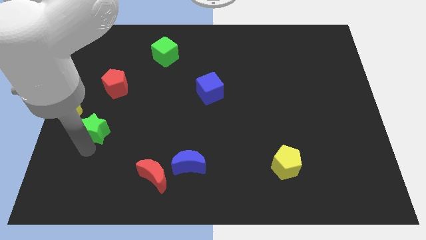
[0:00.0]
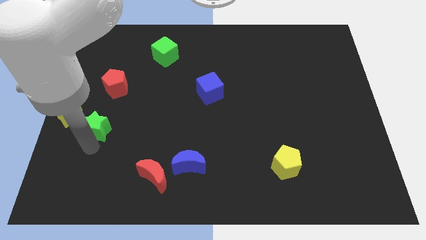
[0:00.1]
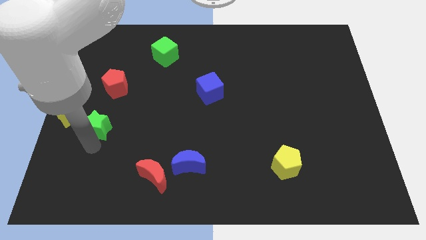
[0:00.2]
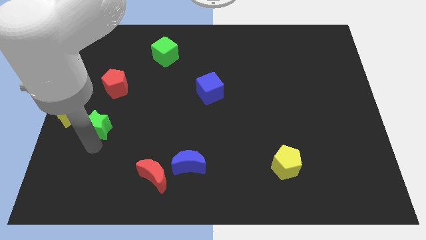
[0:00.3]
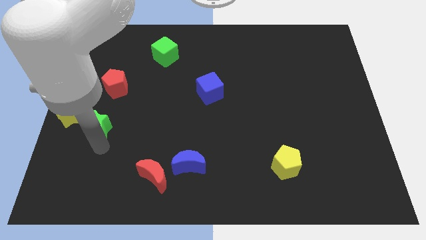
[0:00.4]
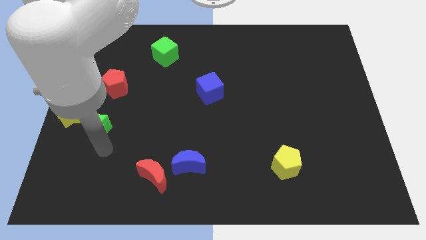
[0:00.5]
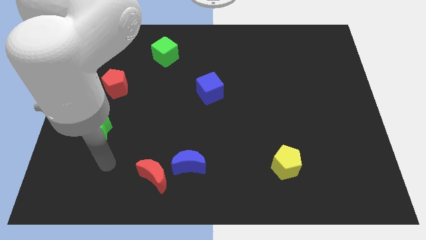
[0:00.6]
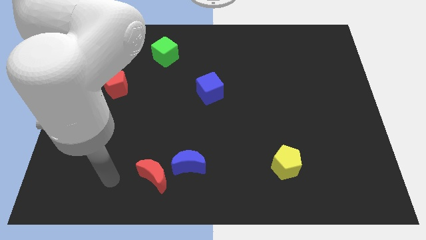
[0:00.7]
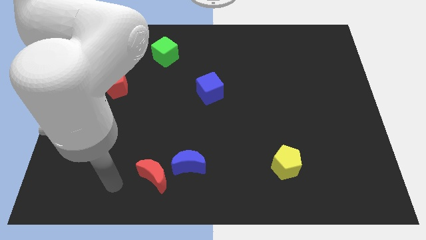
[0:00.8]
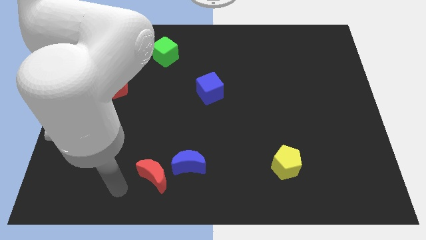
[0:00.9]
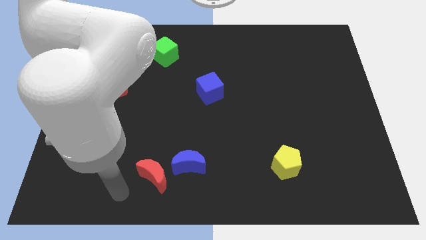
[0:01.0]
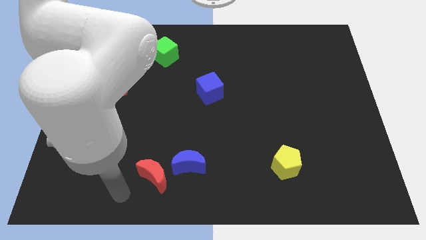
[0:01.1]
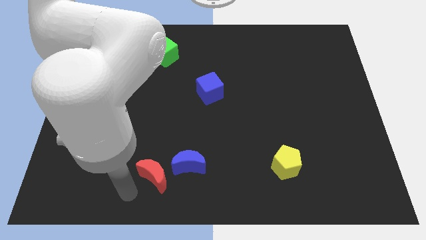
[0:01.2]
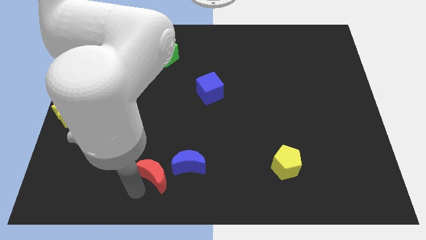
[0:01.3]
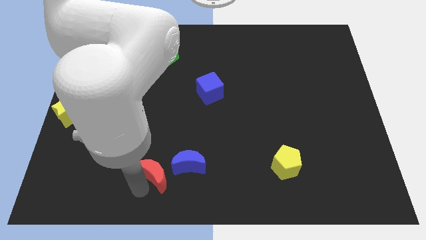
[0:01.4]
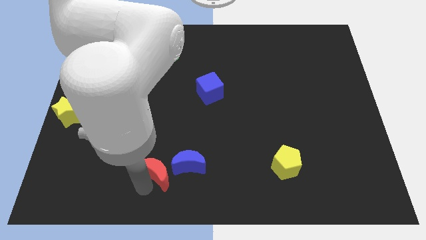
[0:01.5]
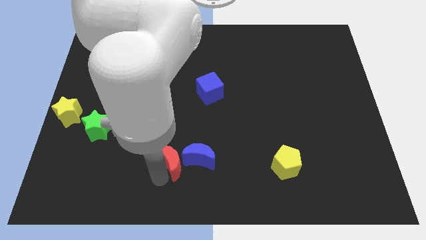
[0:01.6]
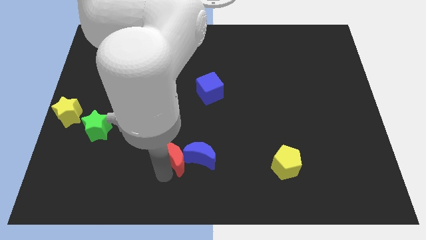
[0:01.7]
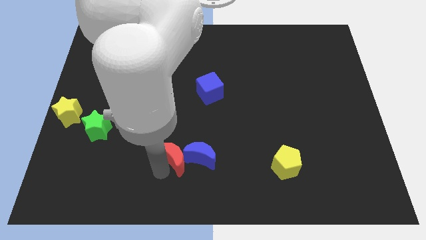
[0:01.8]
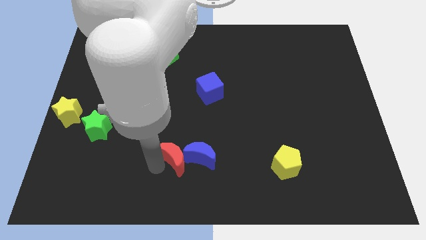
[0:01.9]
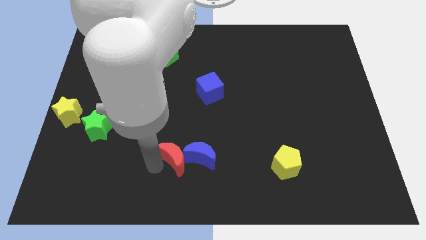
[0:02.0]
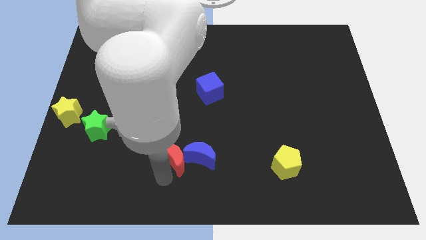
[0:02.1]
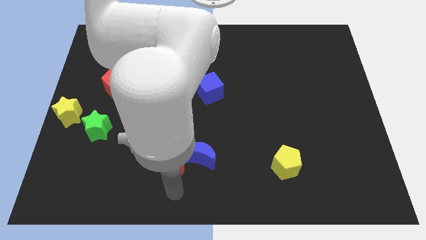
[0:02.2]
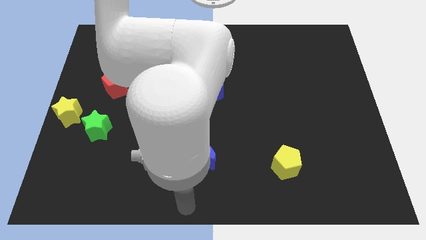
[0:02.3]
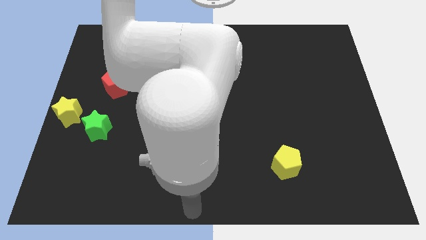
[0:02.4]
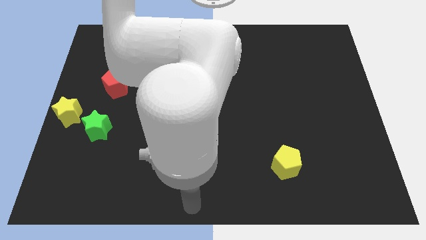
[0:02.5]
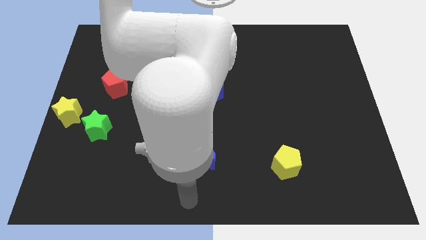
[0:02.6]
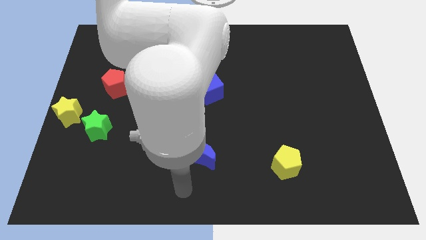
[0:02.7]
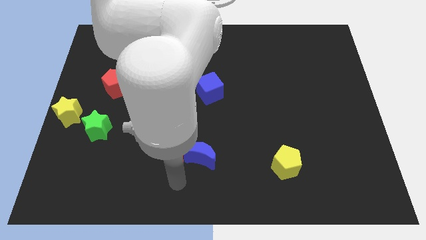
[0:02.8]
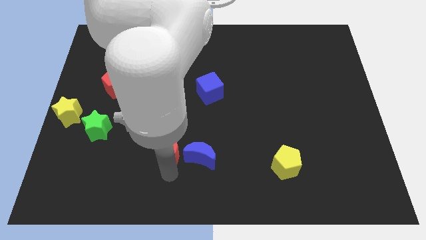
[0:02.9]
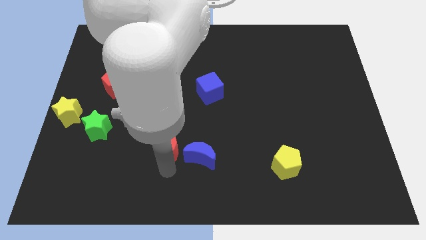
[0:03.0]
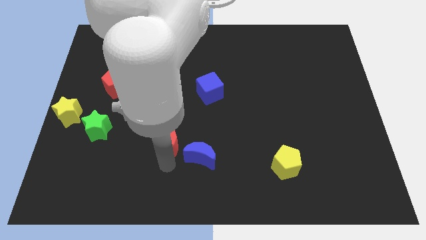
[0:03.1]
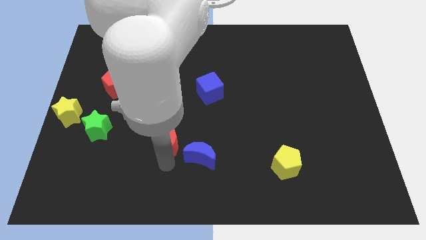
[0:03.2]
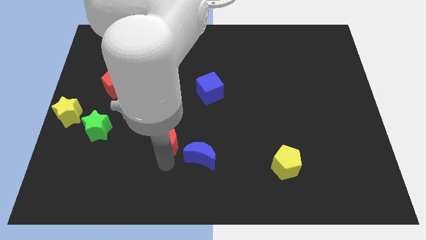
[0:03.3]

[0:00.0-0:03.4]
move the red moon to the left of the blue crescent

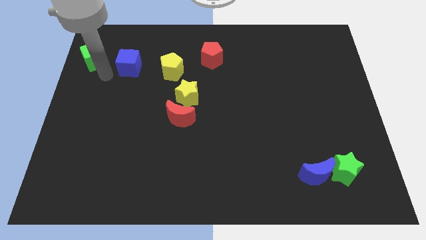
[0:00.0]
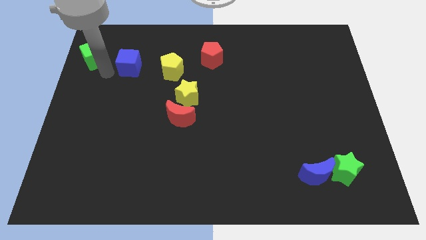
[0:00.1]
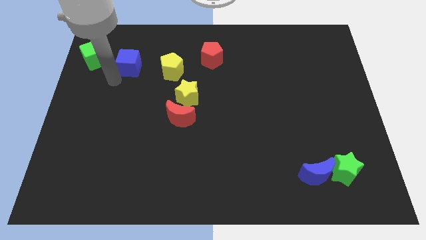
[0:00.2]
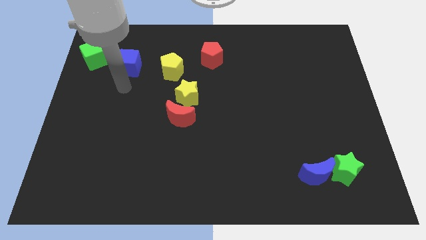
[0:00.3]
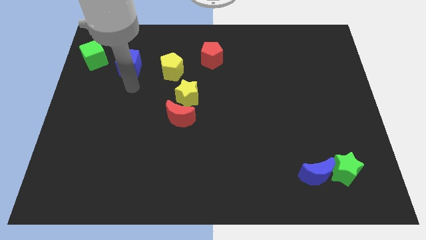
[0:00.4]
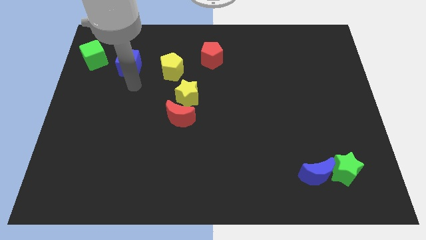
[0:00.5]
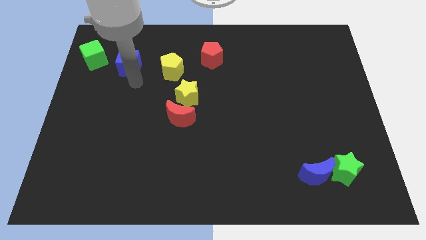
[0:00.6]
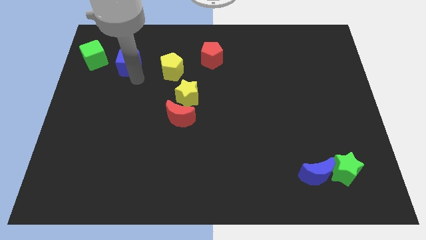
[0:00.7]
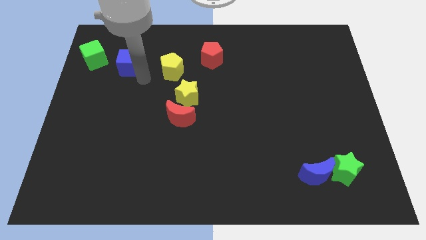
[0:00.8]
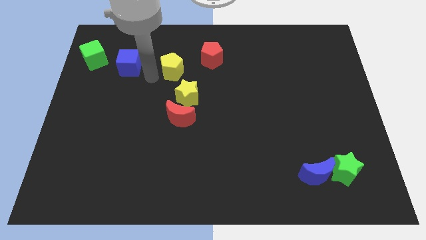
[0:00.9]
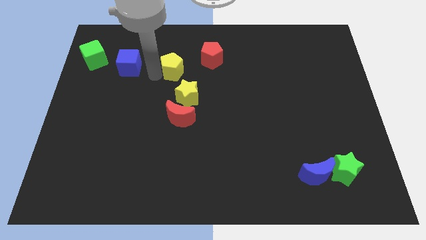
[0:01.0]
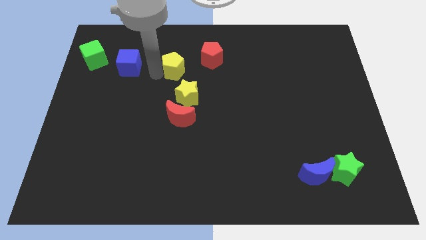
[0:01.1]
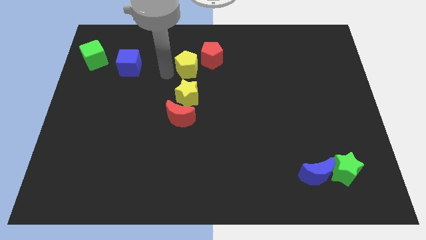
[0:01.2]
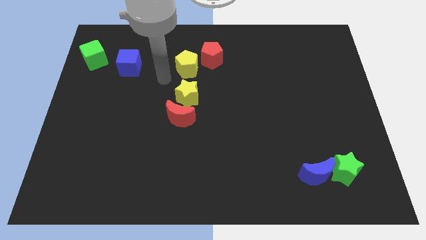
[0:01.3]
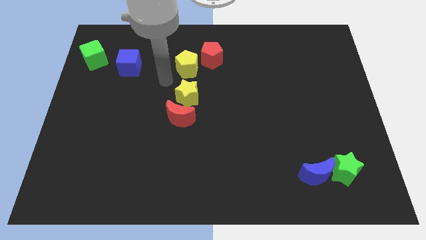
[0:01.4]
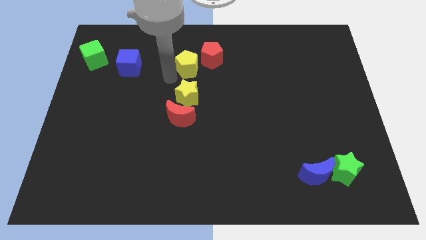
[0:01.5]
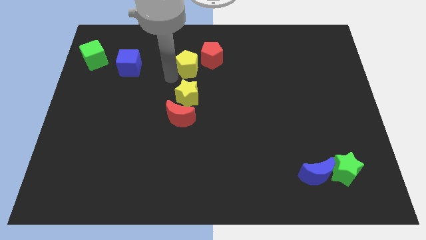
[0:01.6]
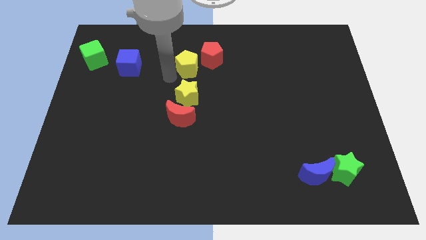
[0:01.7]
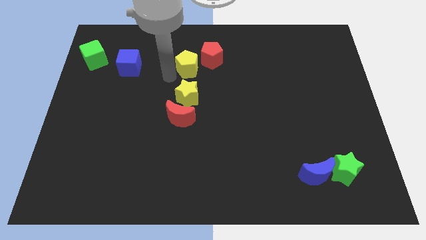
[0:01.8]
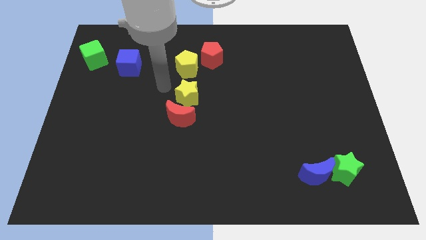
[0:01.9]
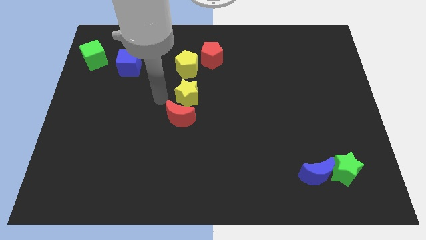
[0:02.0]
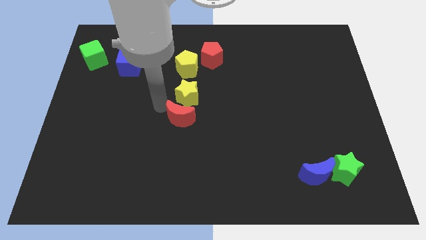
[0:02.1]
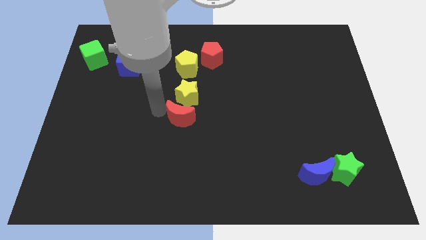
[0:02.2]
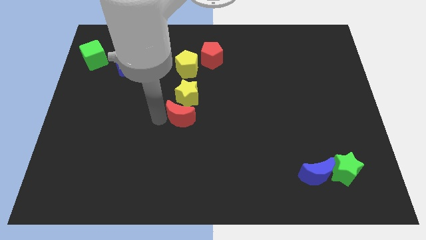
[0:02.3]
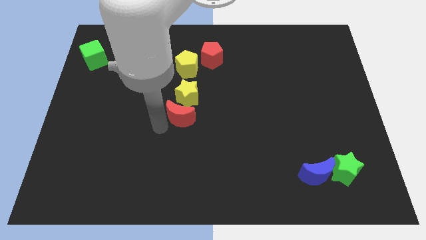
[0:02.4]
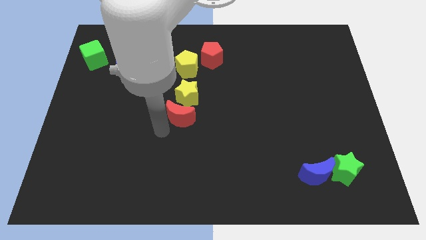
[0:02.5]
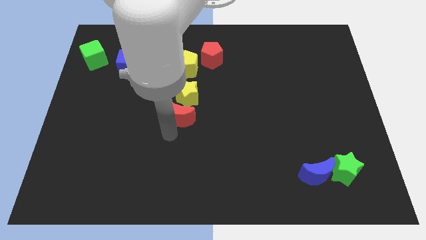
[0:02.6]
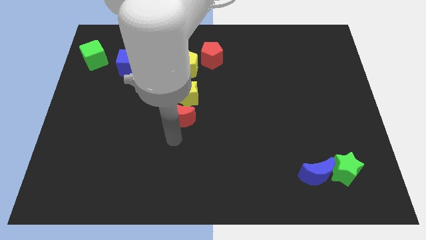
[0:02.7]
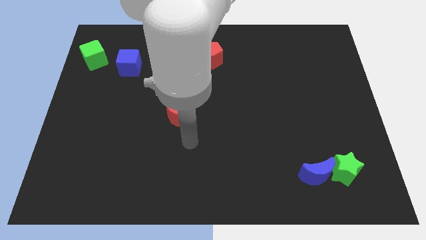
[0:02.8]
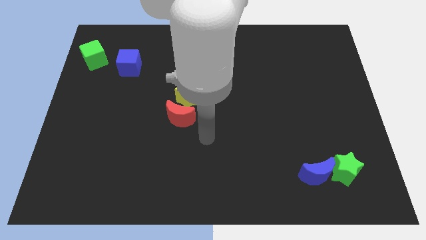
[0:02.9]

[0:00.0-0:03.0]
move yellow pentagon close to the red pentagon

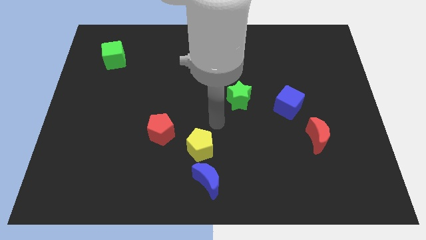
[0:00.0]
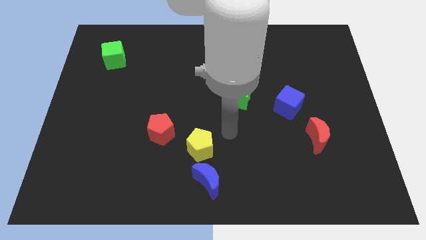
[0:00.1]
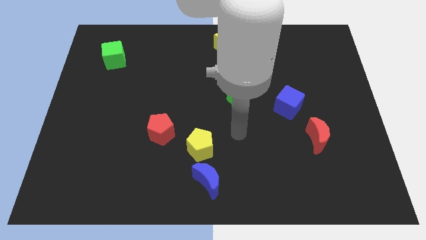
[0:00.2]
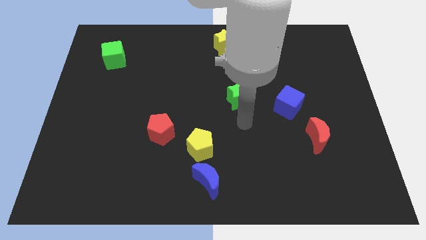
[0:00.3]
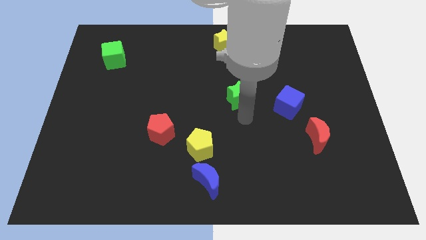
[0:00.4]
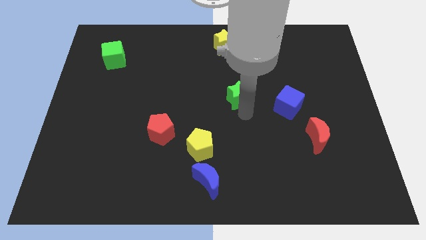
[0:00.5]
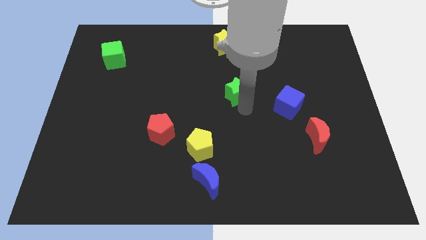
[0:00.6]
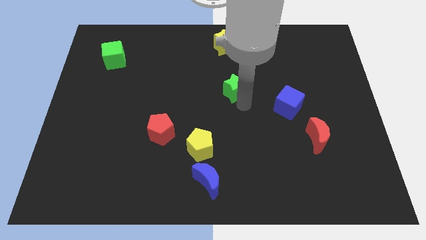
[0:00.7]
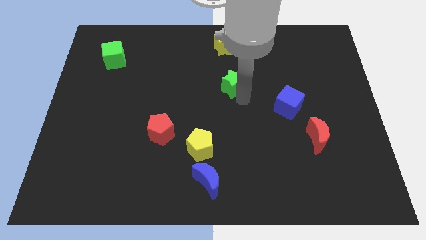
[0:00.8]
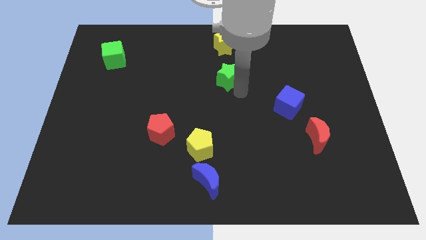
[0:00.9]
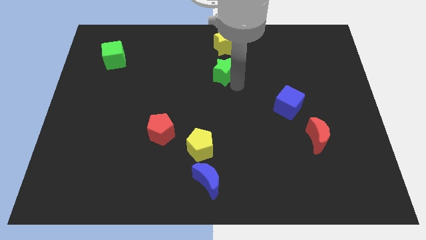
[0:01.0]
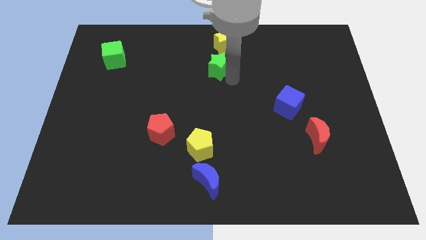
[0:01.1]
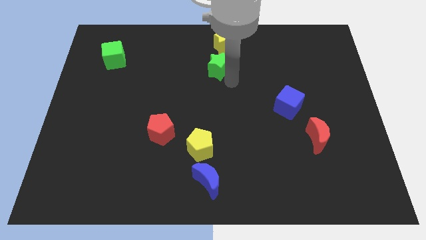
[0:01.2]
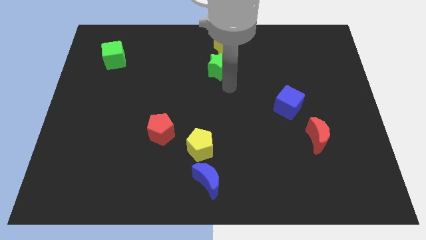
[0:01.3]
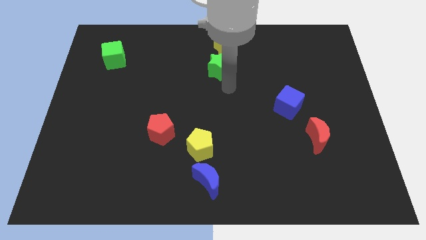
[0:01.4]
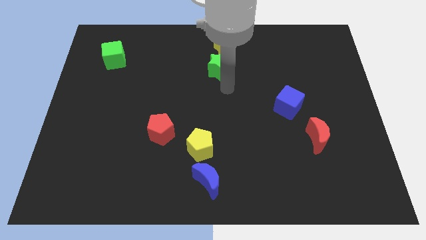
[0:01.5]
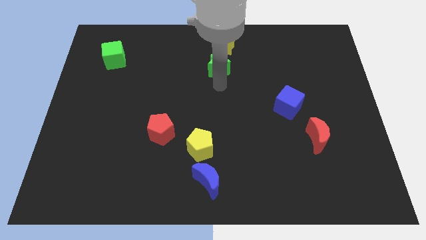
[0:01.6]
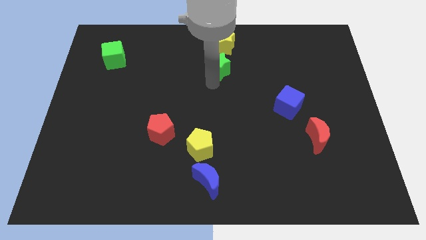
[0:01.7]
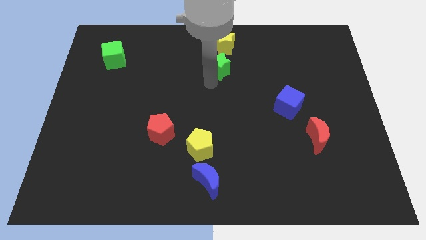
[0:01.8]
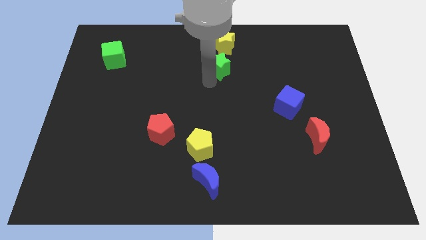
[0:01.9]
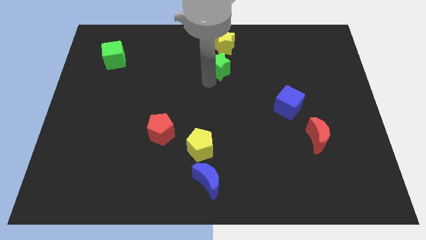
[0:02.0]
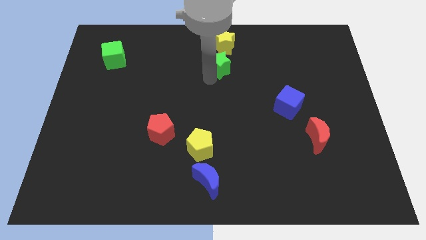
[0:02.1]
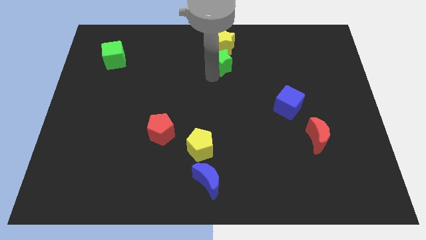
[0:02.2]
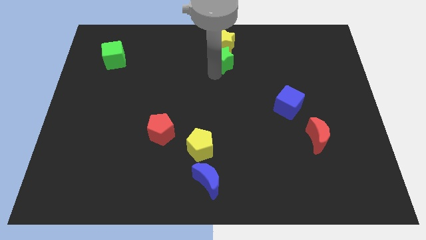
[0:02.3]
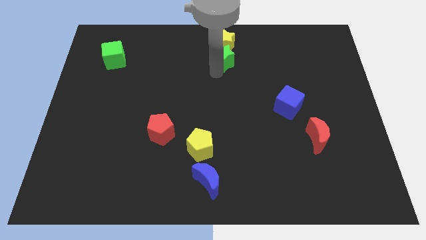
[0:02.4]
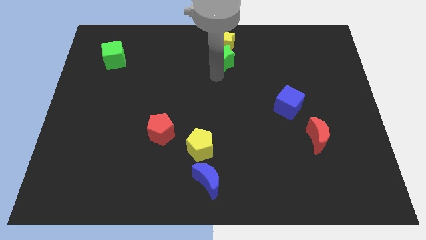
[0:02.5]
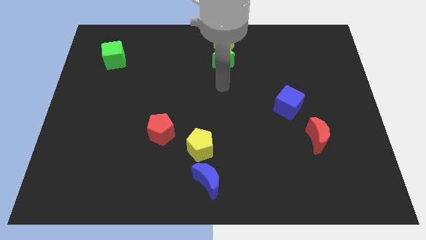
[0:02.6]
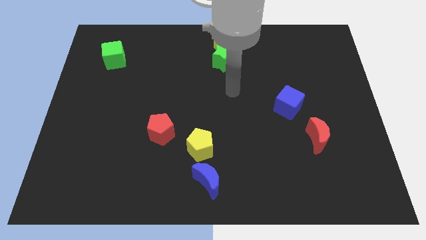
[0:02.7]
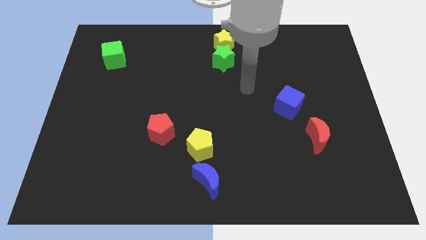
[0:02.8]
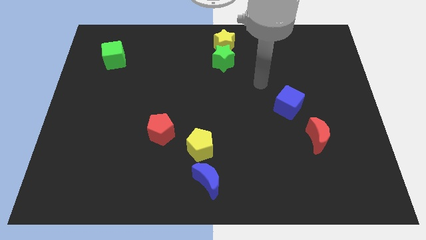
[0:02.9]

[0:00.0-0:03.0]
move the green star to the bottom side of the yellow star
